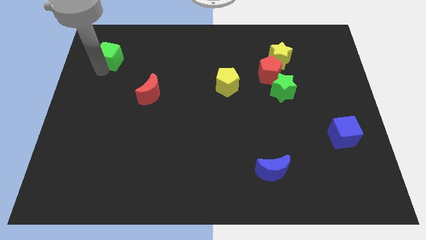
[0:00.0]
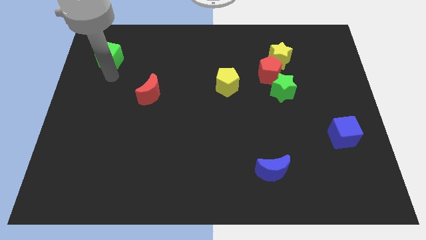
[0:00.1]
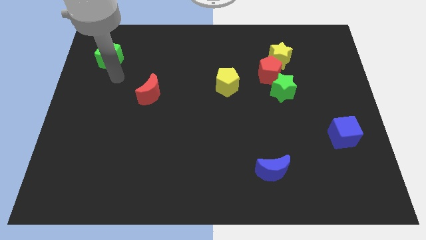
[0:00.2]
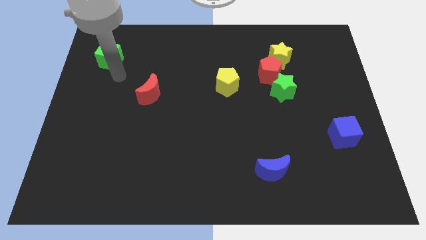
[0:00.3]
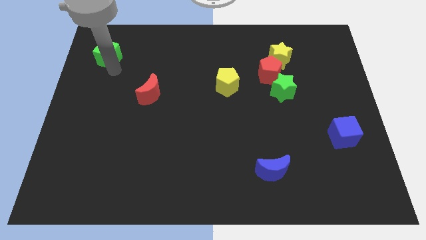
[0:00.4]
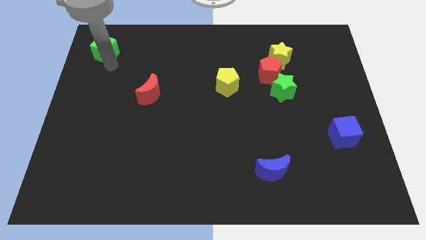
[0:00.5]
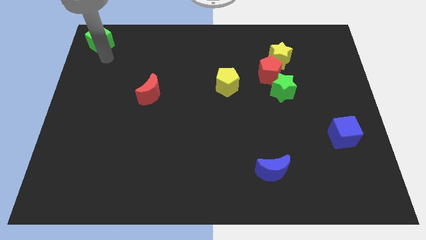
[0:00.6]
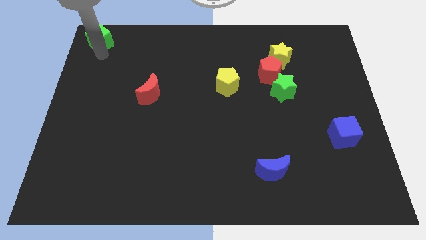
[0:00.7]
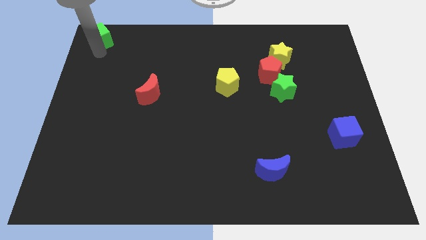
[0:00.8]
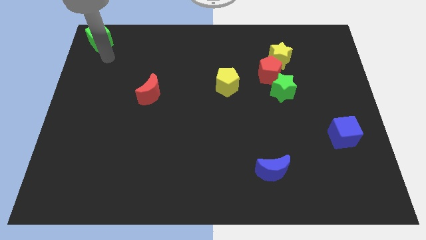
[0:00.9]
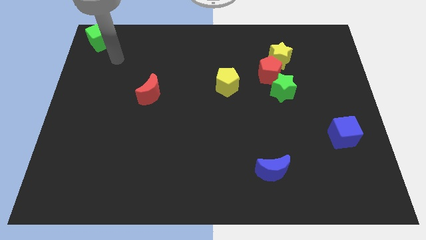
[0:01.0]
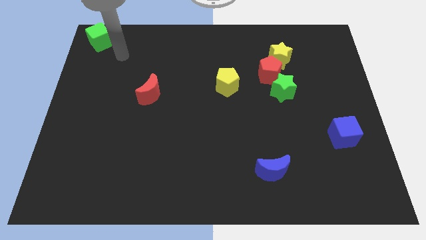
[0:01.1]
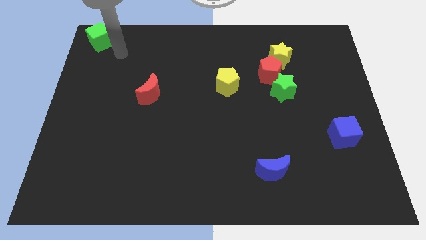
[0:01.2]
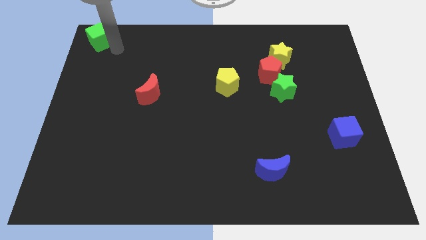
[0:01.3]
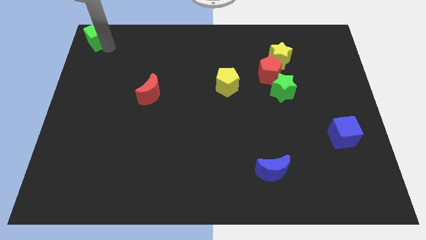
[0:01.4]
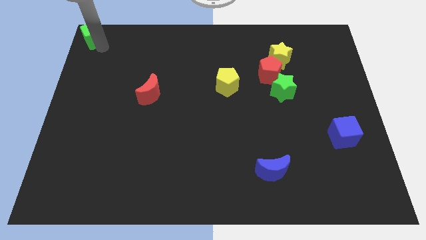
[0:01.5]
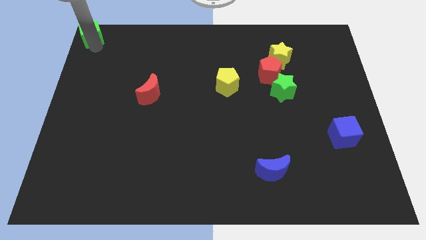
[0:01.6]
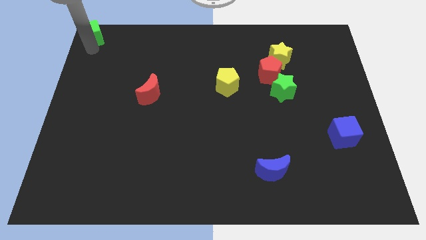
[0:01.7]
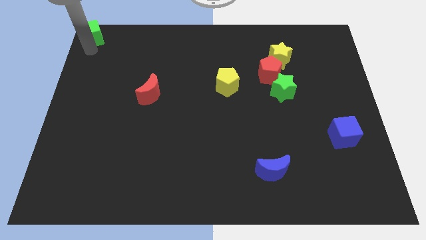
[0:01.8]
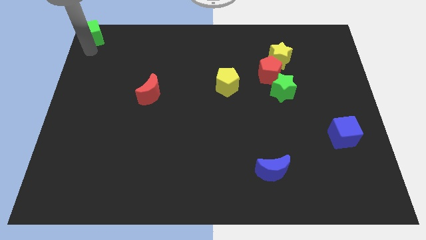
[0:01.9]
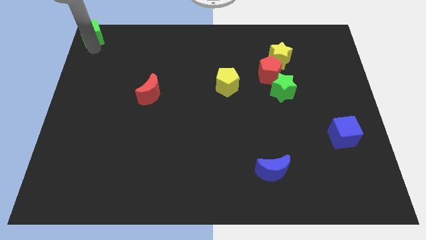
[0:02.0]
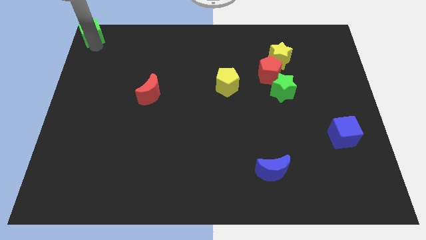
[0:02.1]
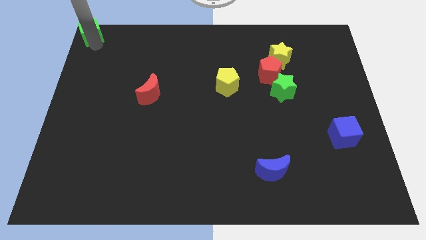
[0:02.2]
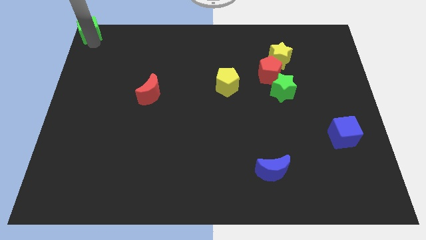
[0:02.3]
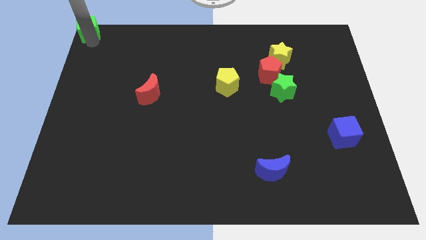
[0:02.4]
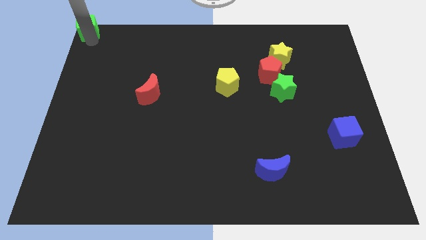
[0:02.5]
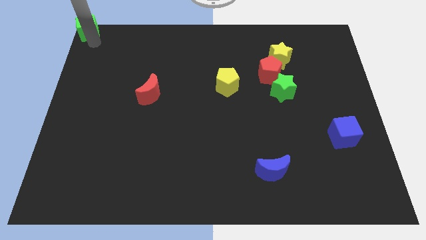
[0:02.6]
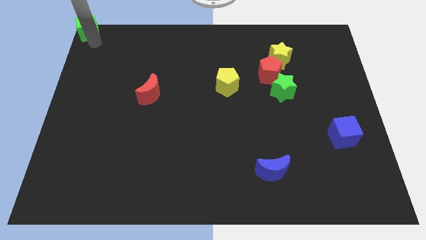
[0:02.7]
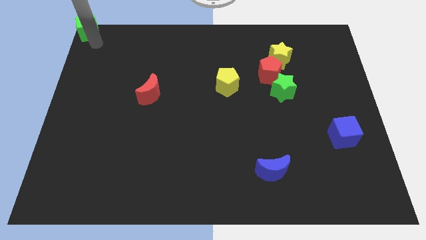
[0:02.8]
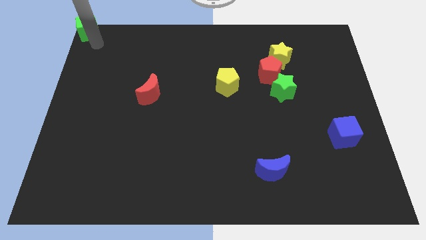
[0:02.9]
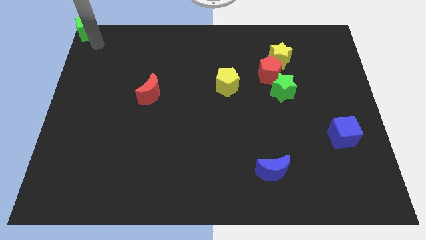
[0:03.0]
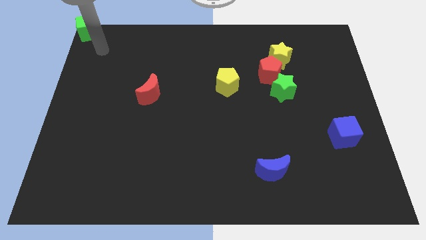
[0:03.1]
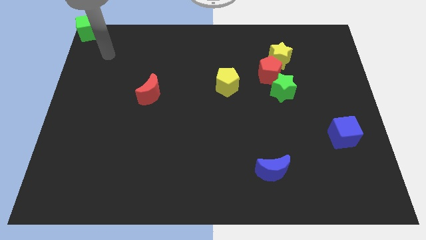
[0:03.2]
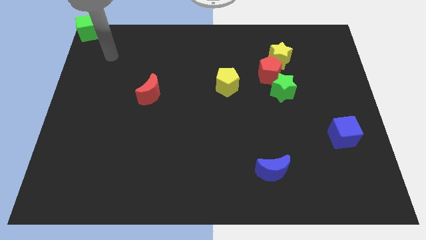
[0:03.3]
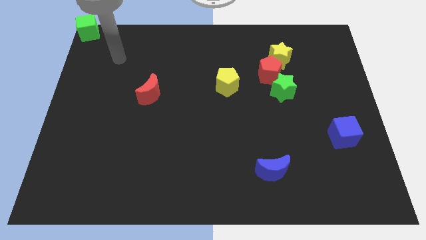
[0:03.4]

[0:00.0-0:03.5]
put the green cube to the top left corner of the board

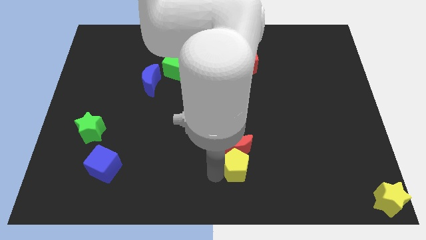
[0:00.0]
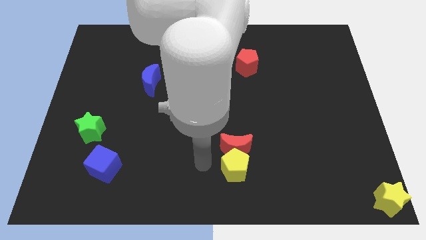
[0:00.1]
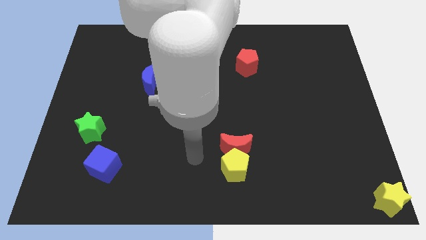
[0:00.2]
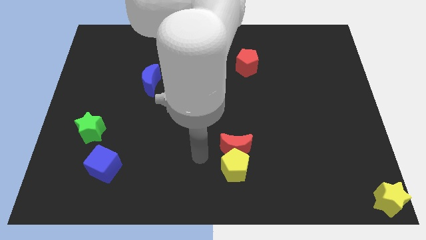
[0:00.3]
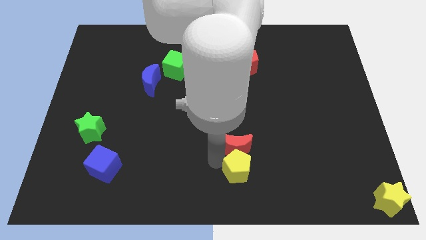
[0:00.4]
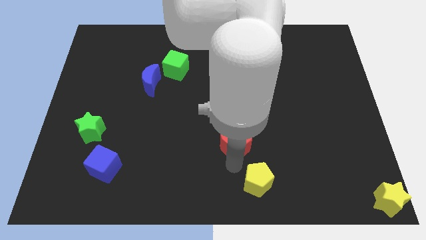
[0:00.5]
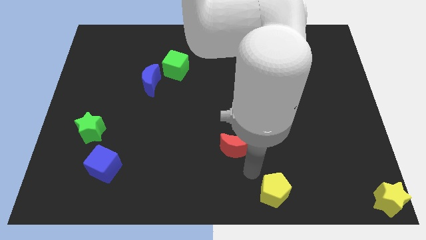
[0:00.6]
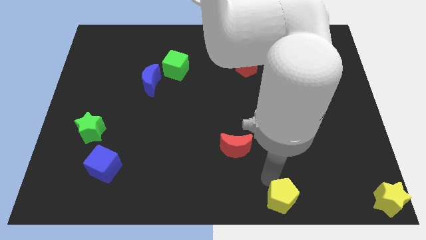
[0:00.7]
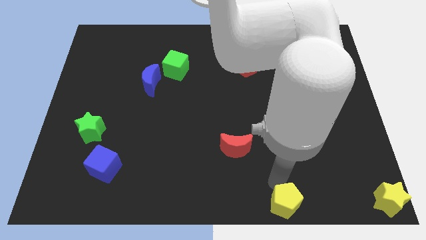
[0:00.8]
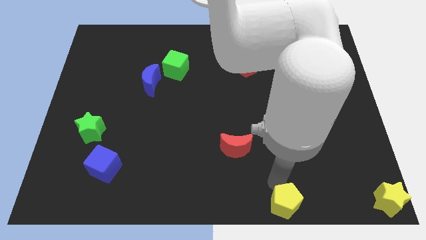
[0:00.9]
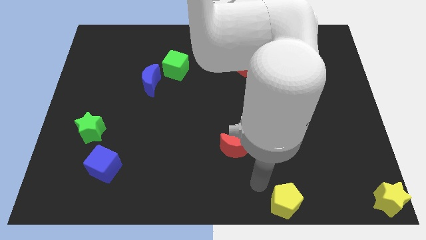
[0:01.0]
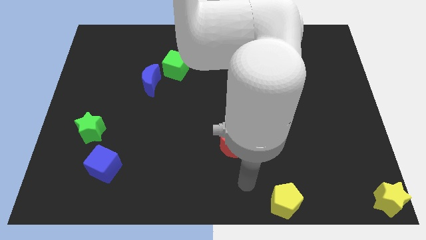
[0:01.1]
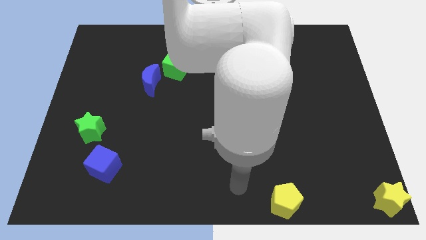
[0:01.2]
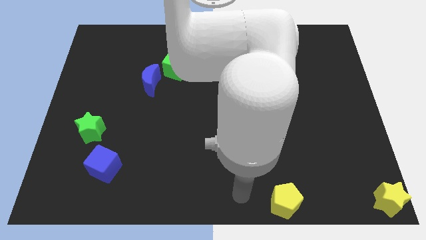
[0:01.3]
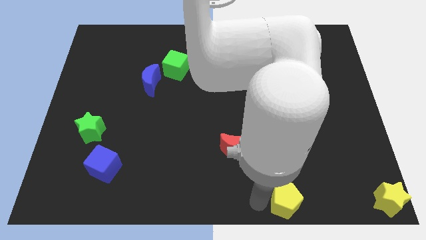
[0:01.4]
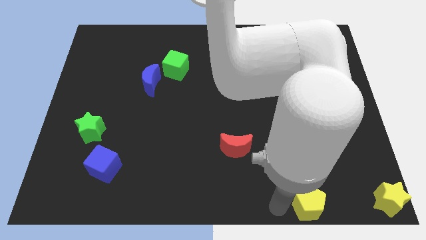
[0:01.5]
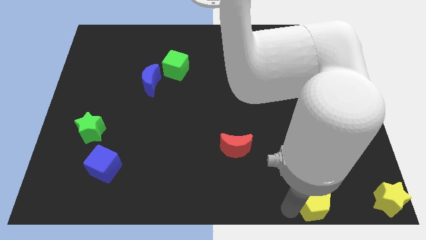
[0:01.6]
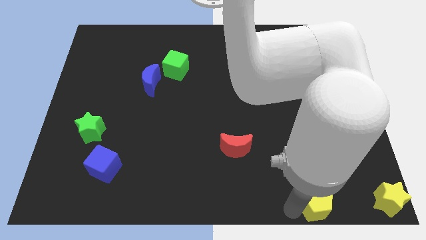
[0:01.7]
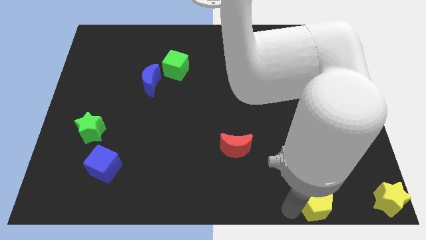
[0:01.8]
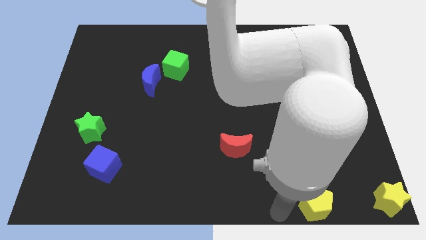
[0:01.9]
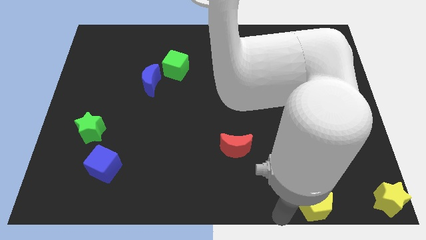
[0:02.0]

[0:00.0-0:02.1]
move the yellow pentagon towards the bottom right

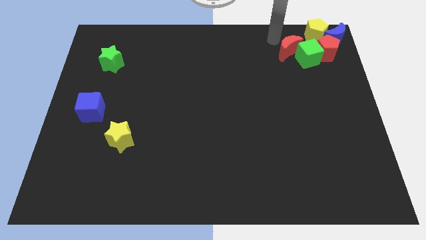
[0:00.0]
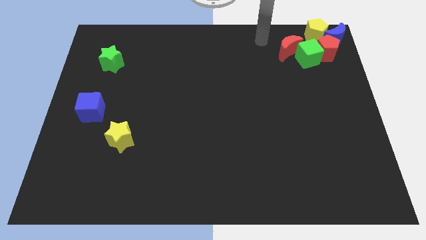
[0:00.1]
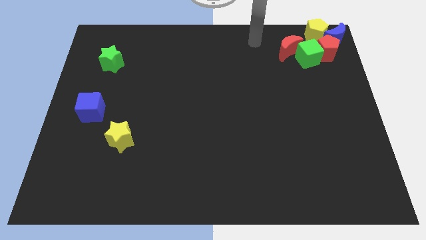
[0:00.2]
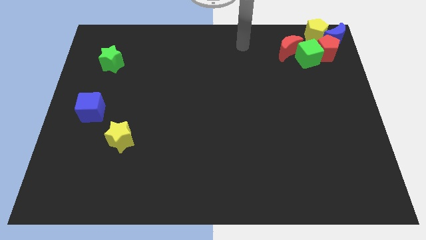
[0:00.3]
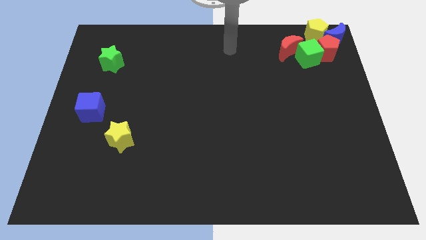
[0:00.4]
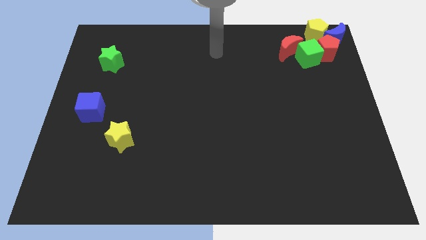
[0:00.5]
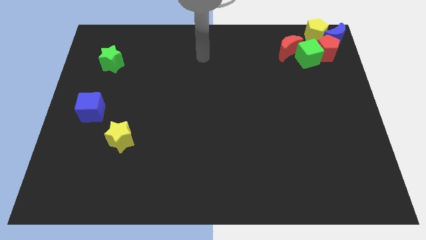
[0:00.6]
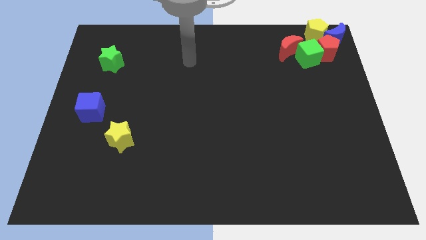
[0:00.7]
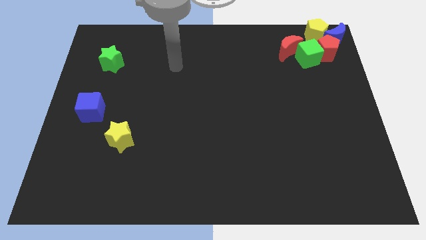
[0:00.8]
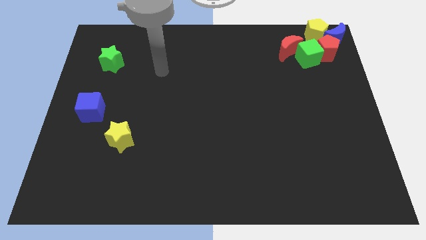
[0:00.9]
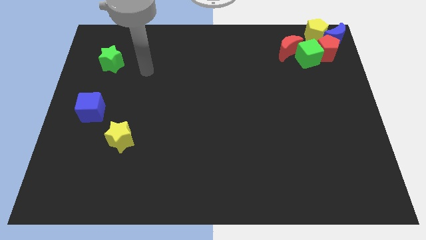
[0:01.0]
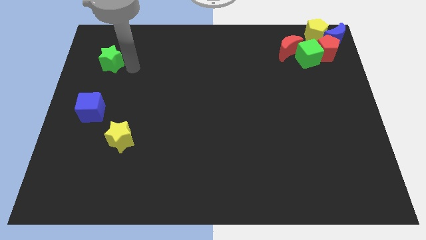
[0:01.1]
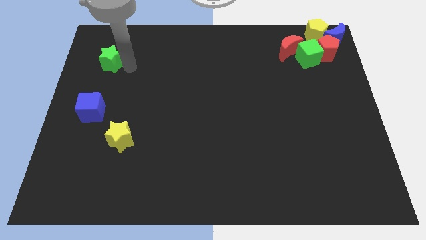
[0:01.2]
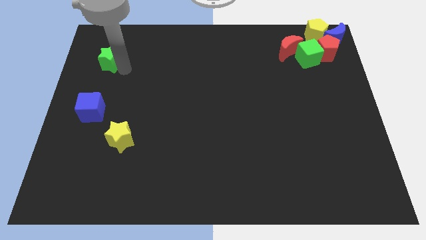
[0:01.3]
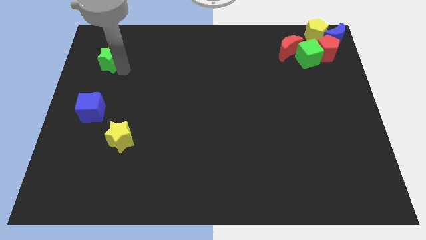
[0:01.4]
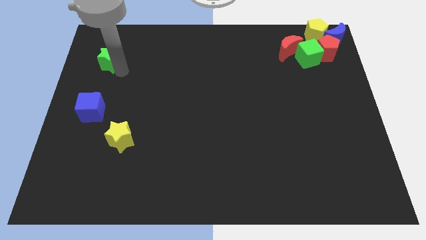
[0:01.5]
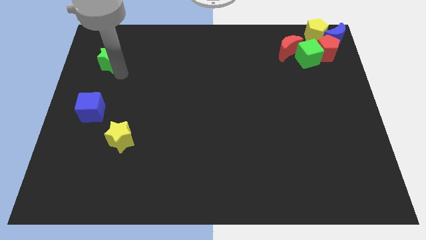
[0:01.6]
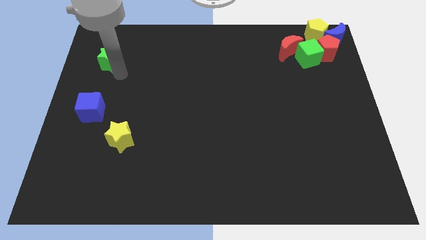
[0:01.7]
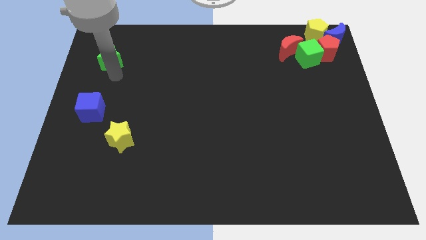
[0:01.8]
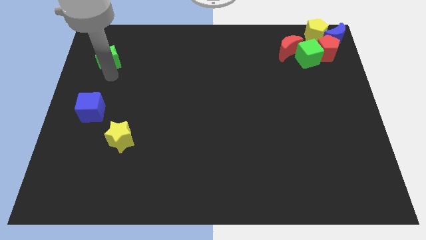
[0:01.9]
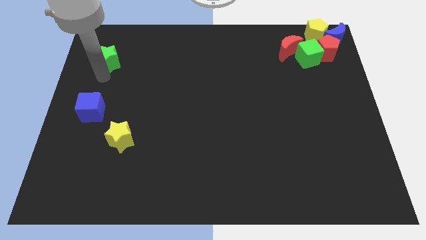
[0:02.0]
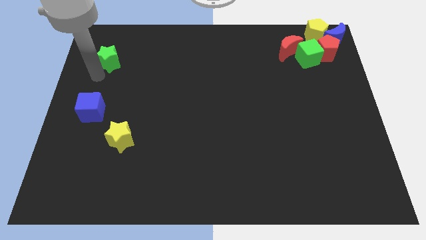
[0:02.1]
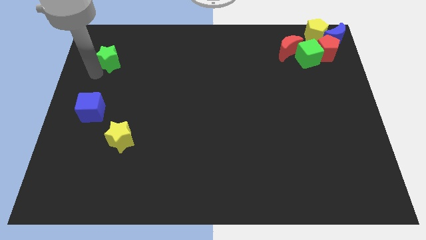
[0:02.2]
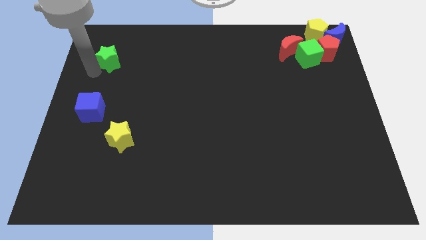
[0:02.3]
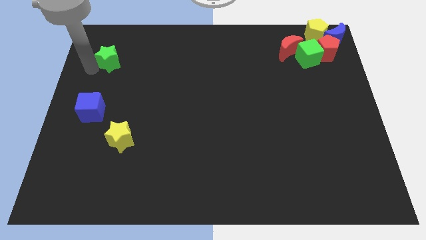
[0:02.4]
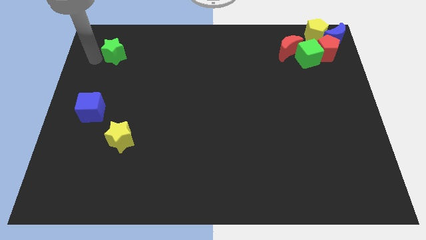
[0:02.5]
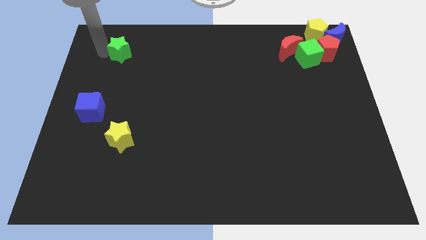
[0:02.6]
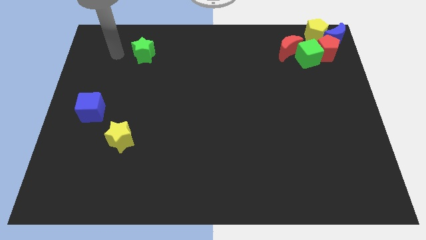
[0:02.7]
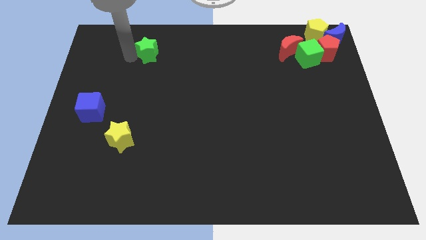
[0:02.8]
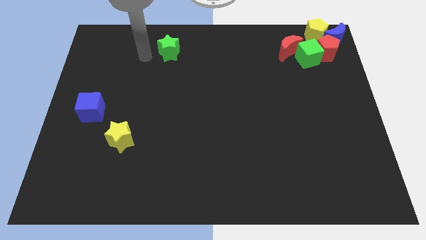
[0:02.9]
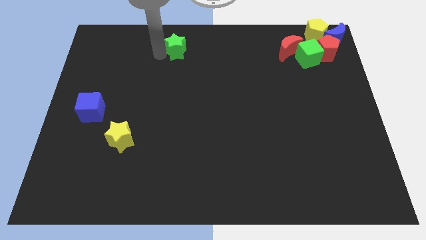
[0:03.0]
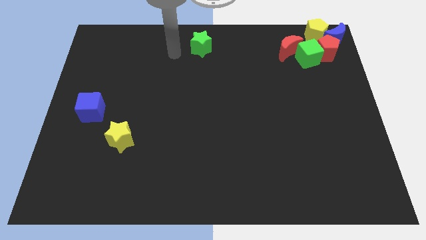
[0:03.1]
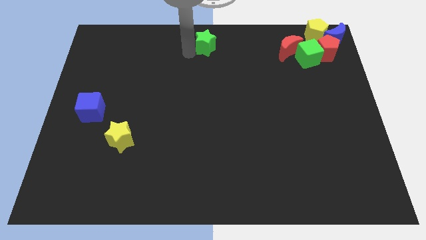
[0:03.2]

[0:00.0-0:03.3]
place the green star to the top center of the board
